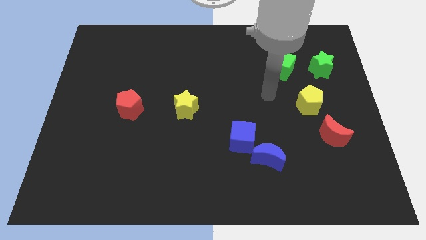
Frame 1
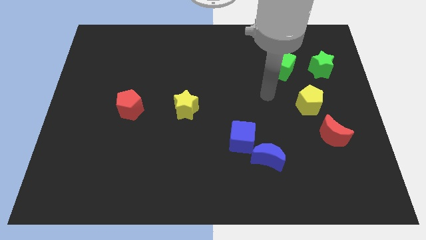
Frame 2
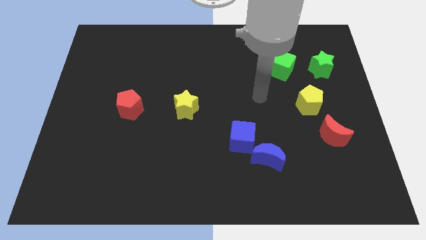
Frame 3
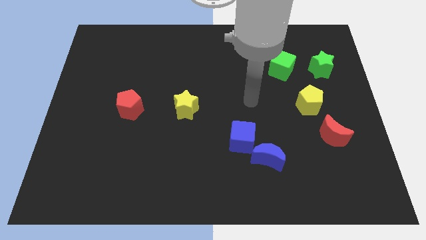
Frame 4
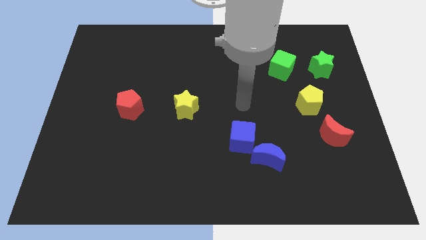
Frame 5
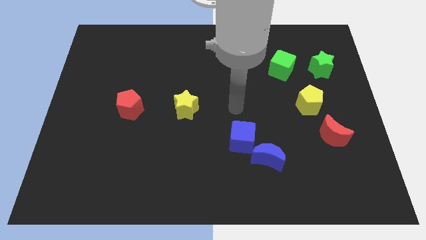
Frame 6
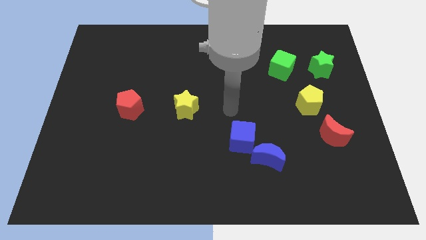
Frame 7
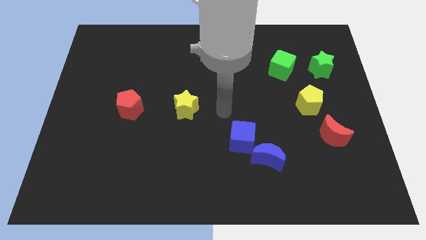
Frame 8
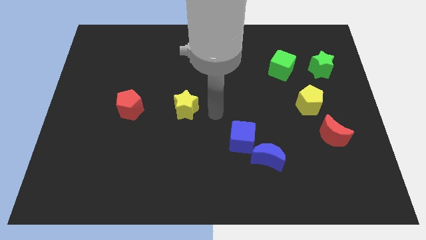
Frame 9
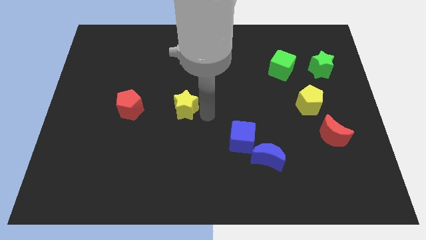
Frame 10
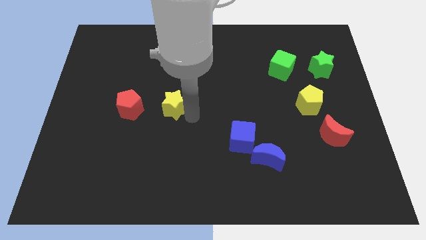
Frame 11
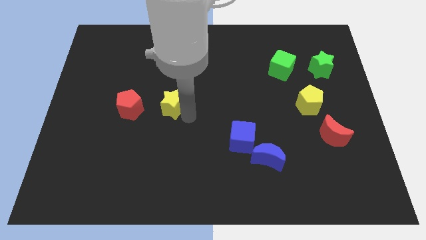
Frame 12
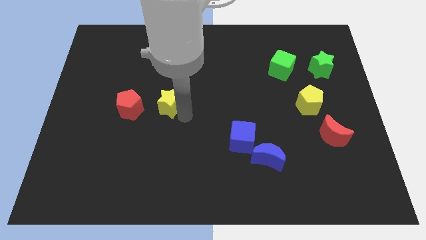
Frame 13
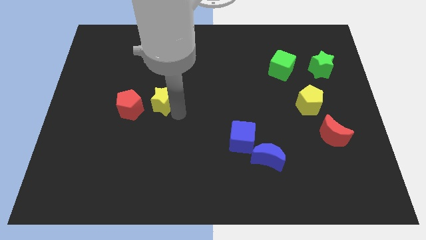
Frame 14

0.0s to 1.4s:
push the yellow star slightly to the left

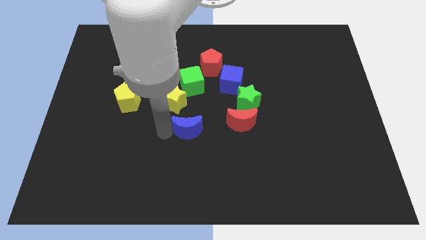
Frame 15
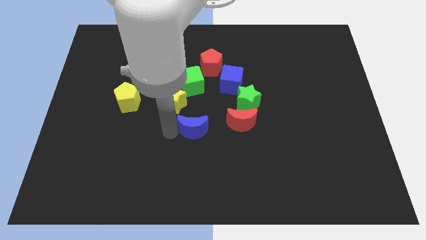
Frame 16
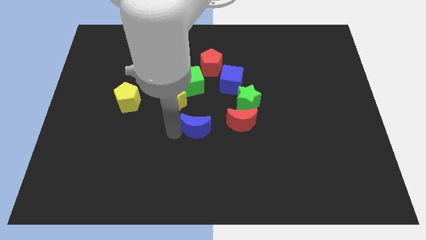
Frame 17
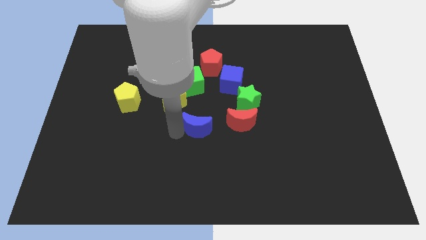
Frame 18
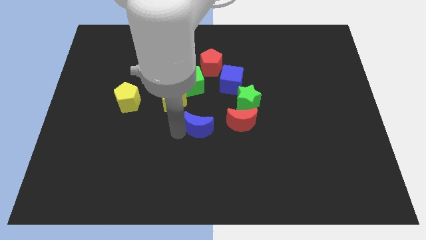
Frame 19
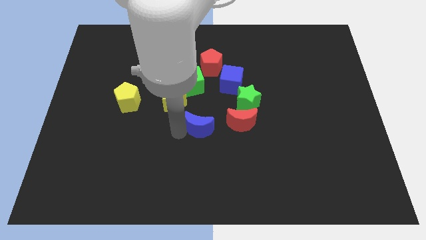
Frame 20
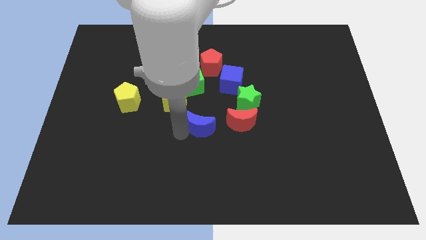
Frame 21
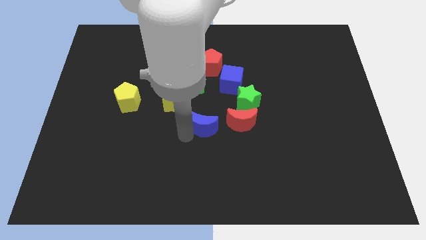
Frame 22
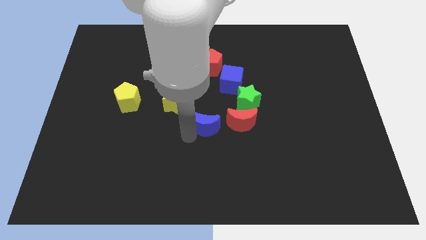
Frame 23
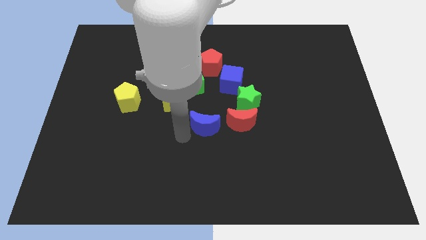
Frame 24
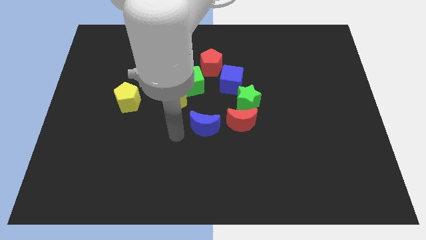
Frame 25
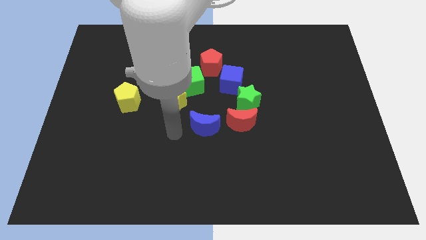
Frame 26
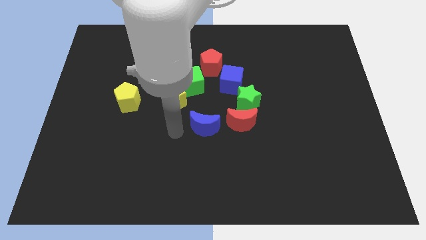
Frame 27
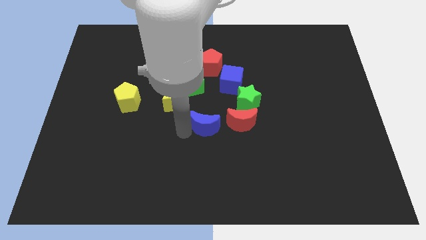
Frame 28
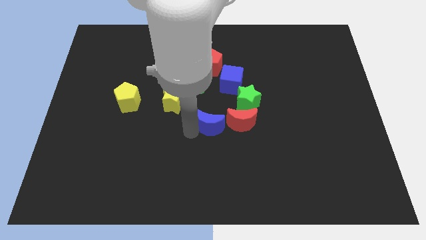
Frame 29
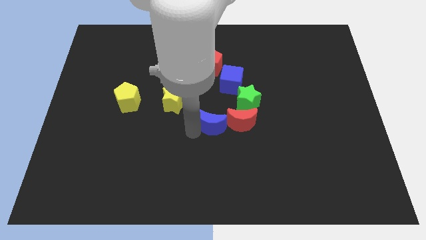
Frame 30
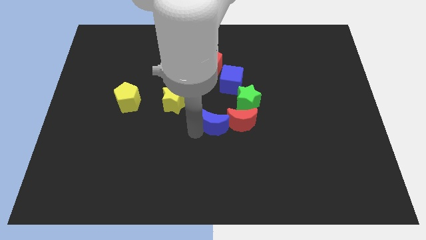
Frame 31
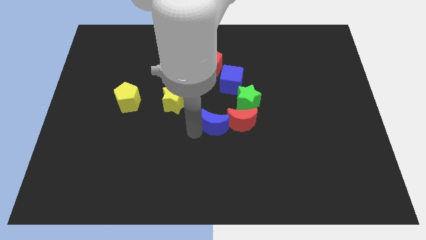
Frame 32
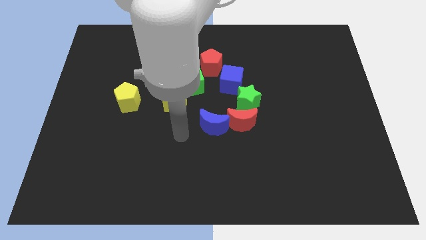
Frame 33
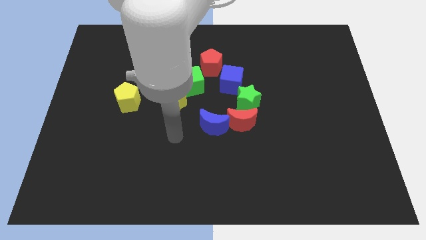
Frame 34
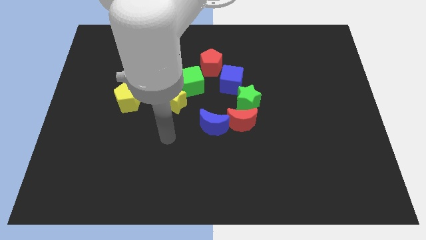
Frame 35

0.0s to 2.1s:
push the blue crescent into the red crescent

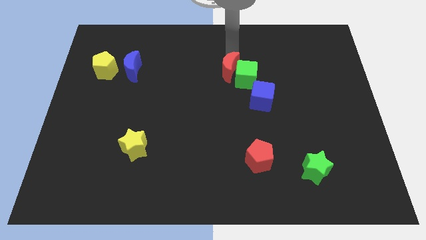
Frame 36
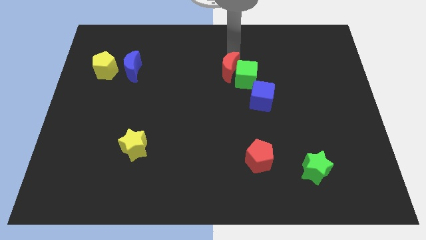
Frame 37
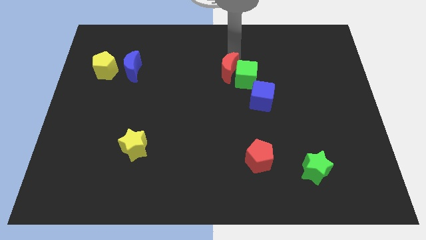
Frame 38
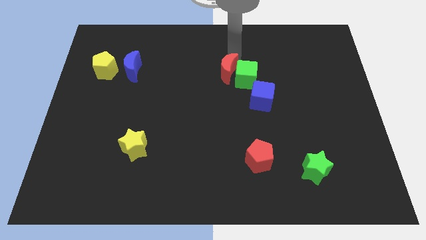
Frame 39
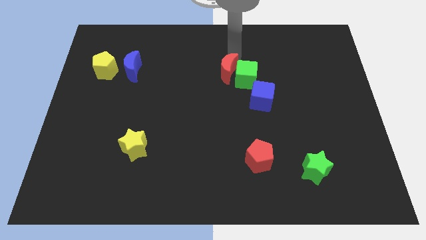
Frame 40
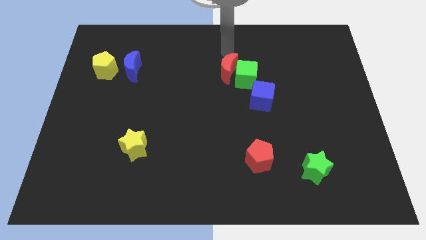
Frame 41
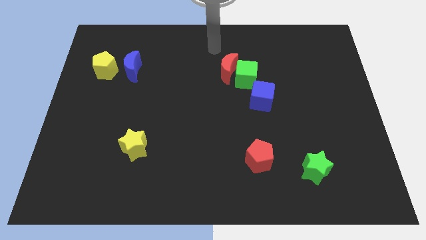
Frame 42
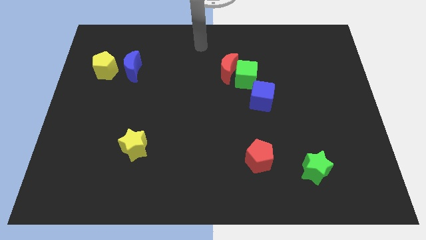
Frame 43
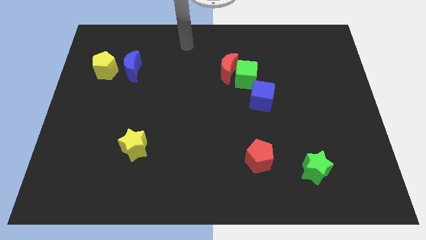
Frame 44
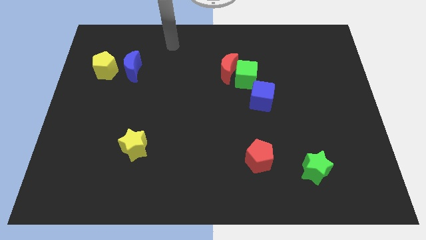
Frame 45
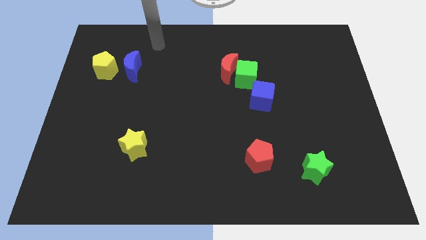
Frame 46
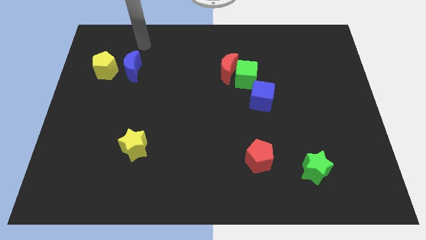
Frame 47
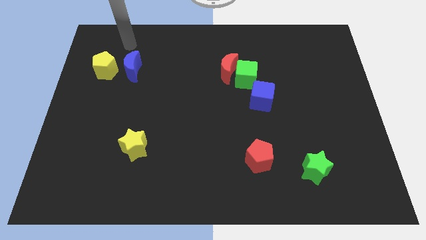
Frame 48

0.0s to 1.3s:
move the arm away from the red moon

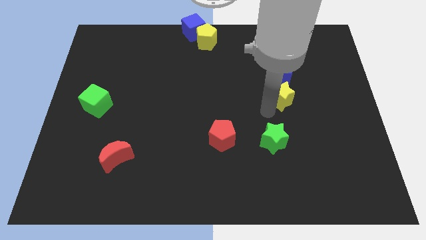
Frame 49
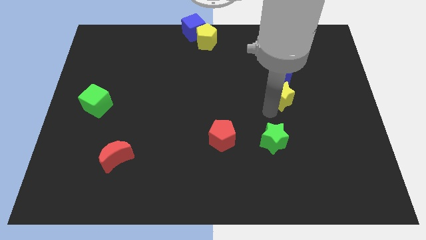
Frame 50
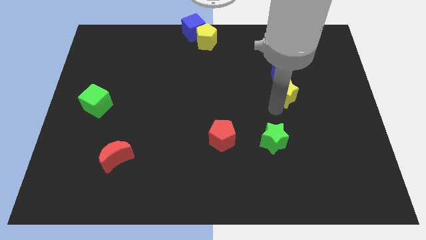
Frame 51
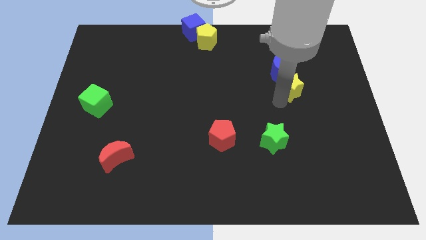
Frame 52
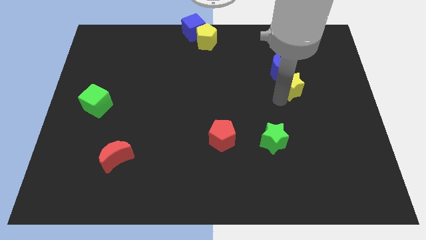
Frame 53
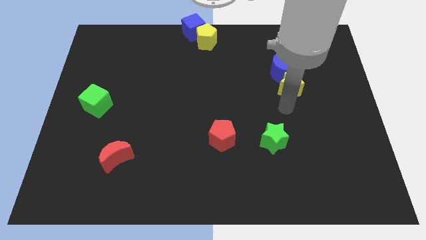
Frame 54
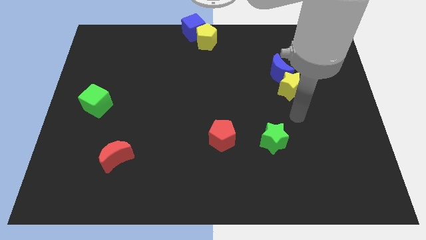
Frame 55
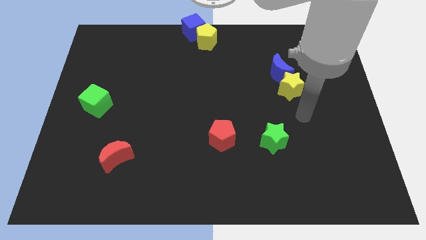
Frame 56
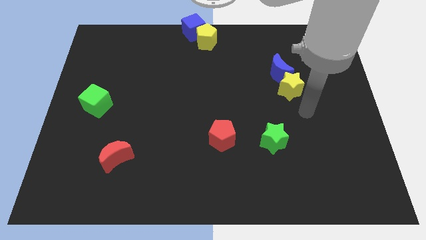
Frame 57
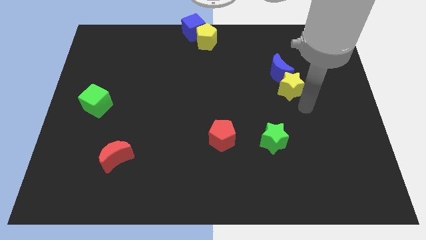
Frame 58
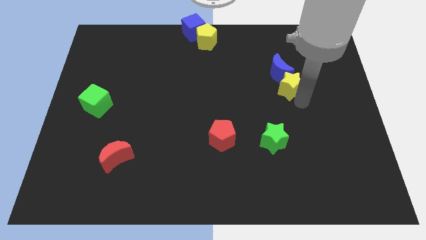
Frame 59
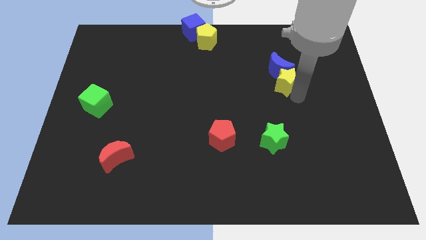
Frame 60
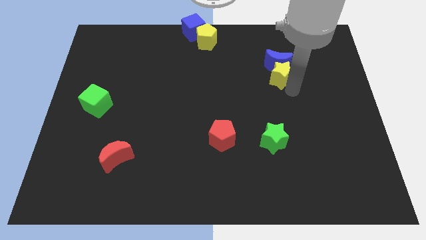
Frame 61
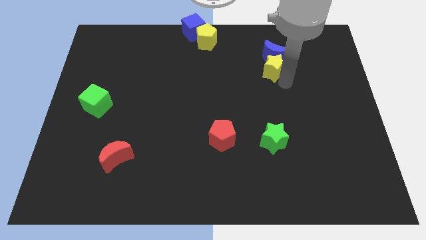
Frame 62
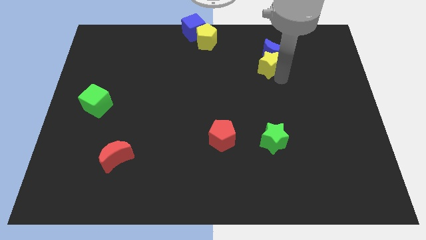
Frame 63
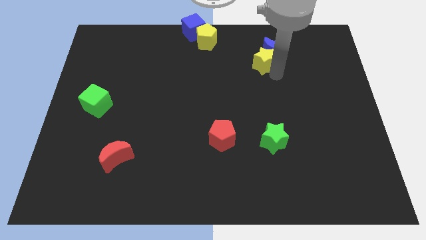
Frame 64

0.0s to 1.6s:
push the yellow star into the blue moon

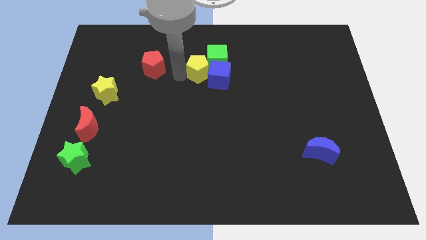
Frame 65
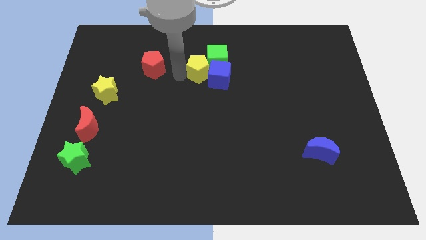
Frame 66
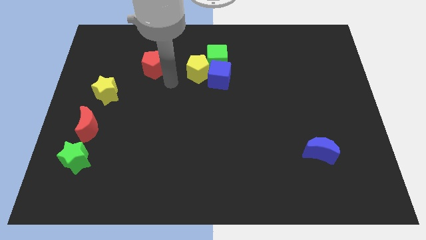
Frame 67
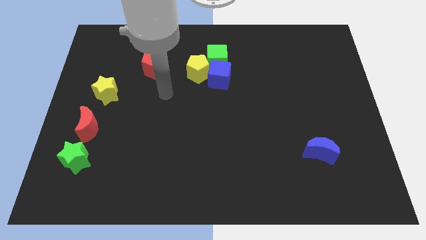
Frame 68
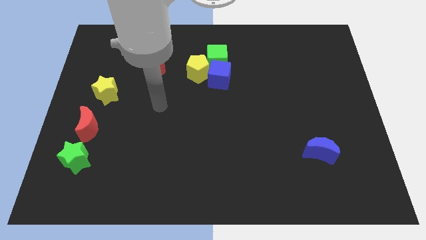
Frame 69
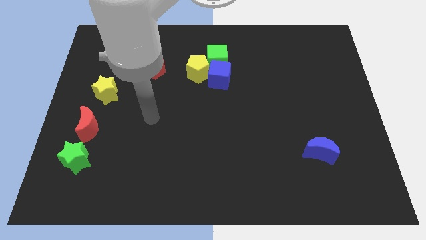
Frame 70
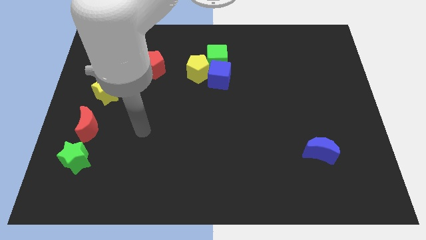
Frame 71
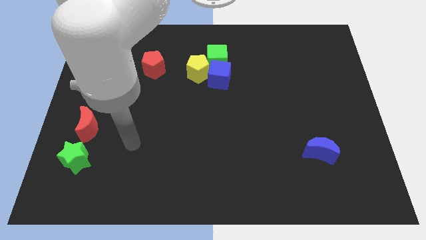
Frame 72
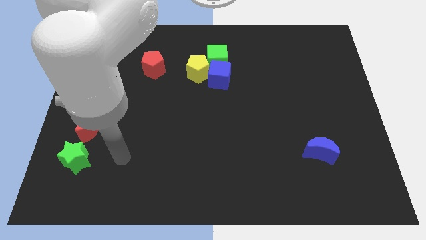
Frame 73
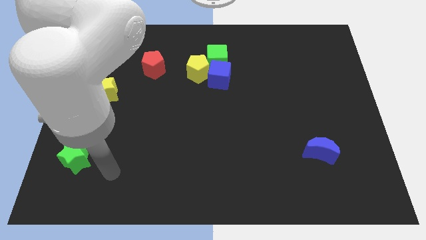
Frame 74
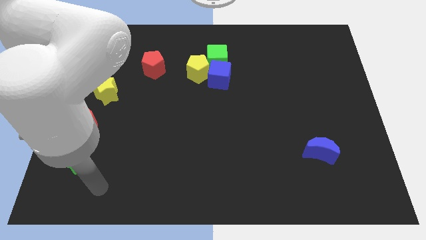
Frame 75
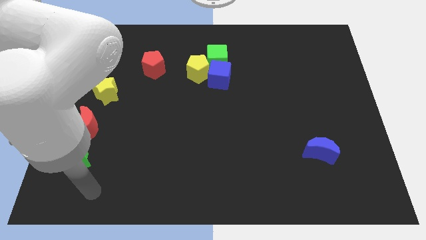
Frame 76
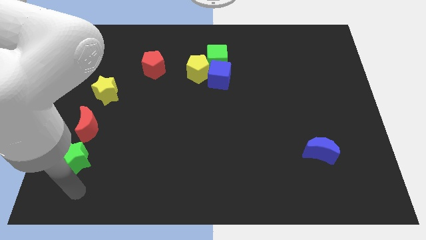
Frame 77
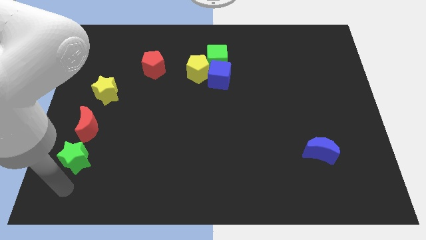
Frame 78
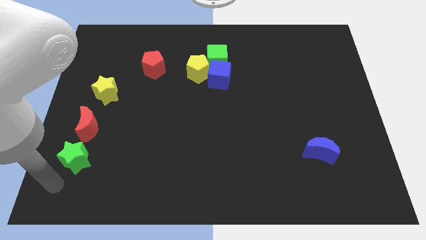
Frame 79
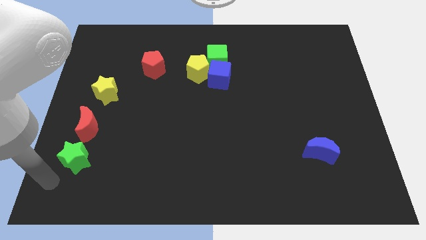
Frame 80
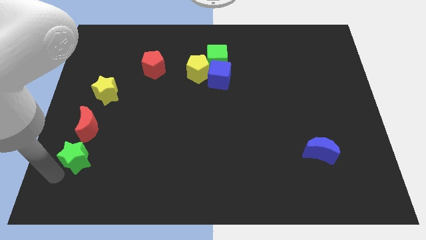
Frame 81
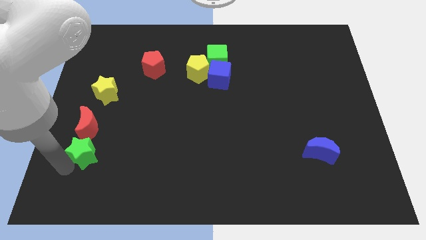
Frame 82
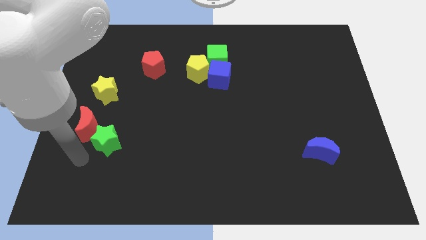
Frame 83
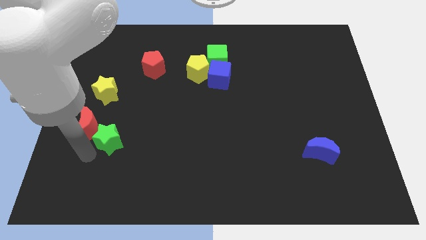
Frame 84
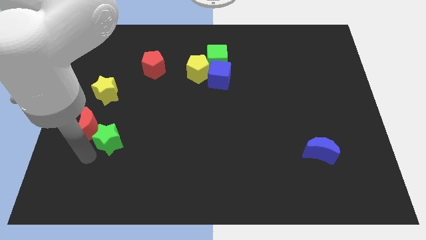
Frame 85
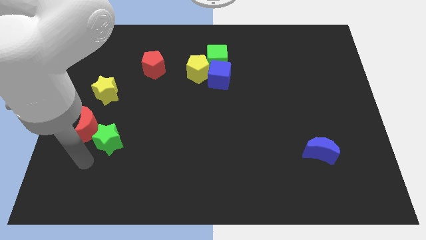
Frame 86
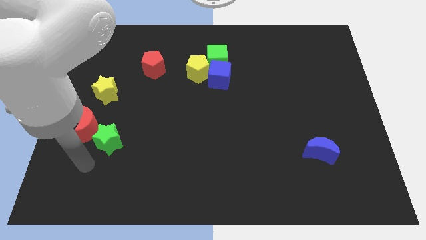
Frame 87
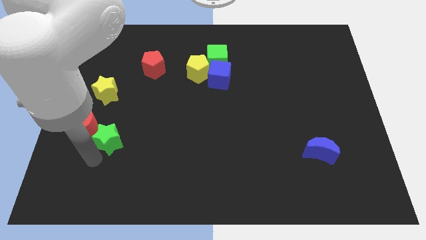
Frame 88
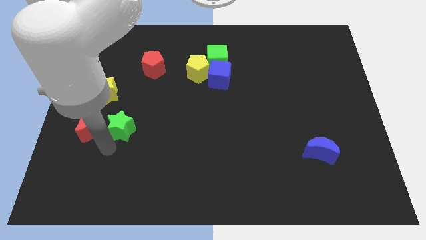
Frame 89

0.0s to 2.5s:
place the green star to the right of the red moon
